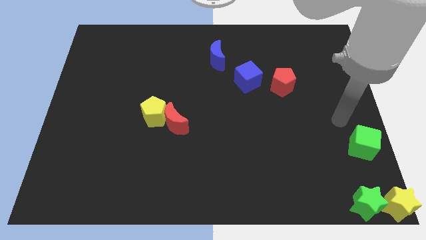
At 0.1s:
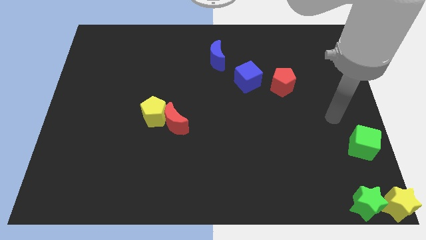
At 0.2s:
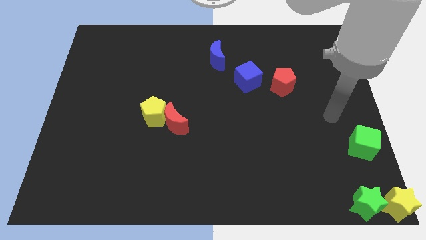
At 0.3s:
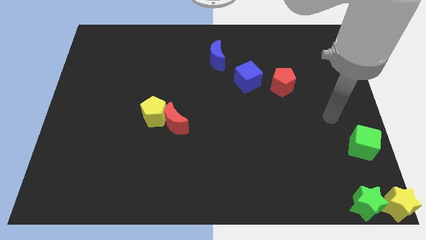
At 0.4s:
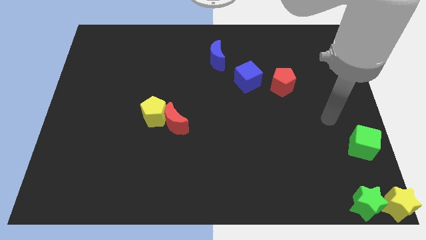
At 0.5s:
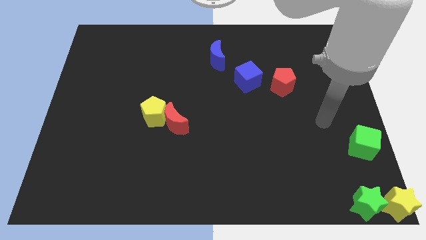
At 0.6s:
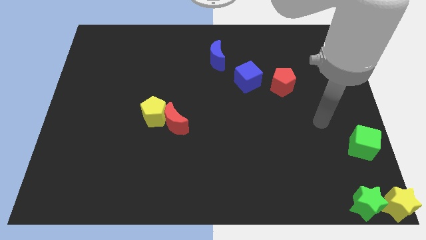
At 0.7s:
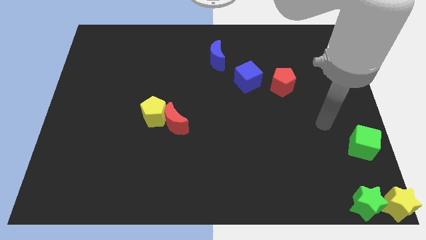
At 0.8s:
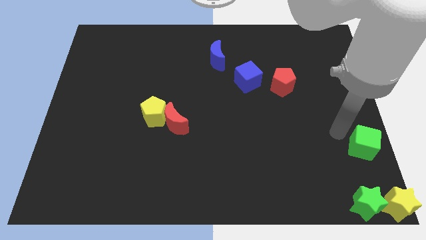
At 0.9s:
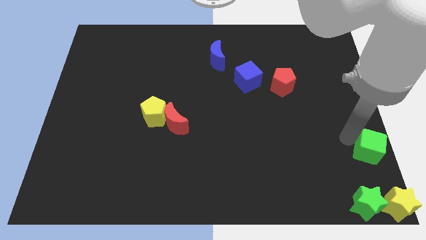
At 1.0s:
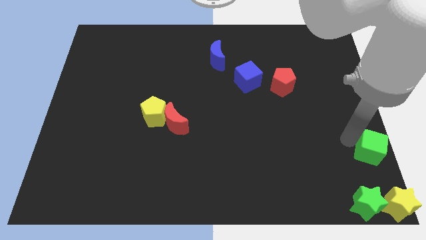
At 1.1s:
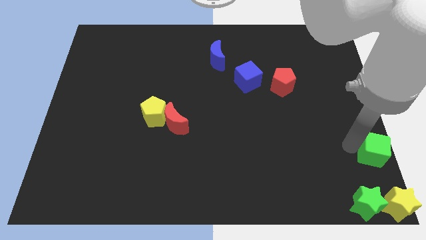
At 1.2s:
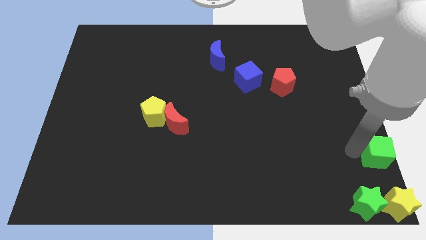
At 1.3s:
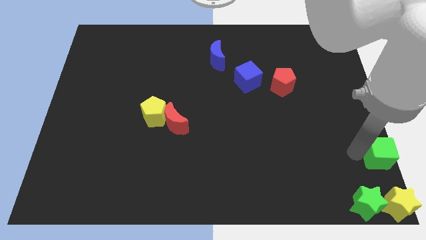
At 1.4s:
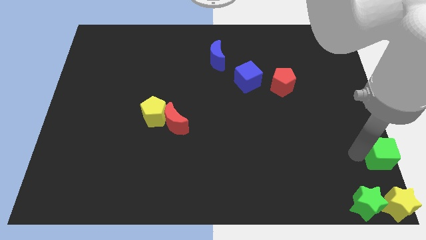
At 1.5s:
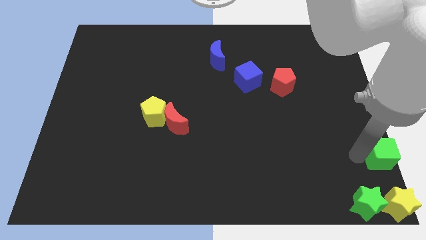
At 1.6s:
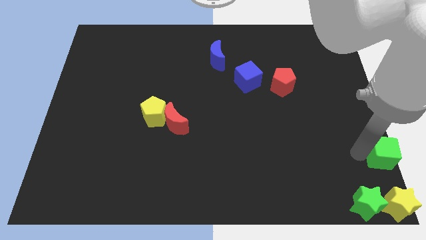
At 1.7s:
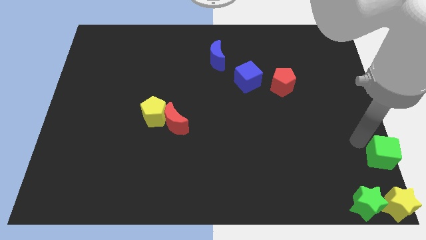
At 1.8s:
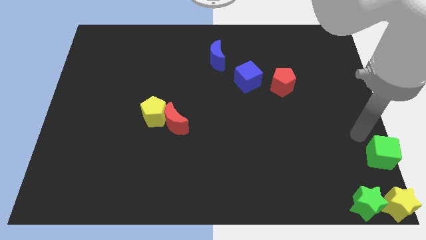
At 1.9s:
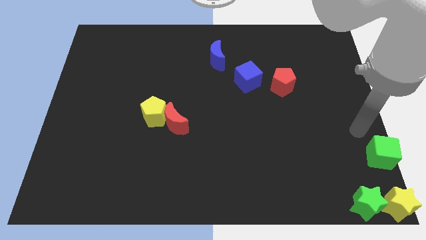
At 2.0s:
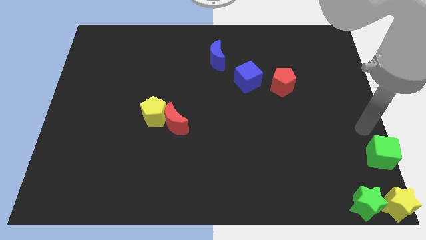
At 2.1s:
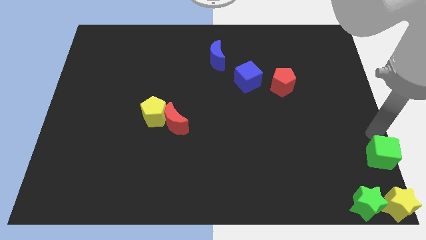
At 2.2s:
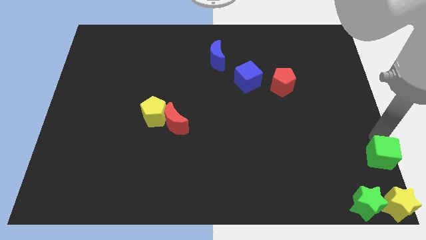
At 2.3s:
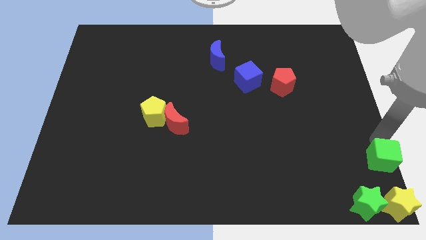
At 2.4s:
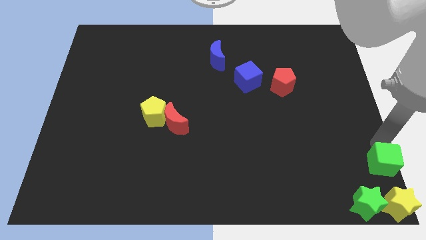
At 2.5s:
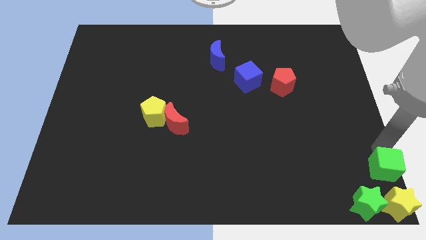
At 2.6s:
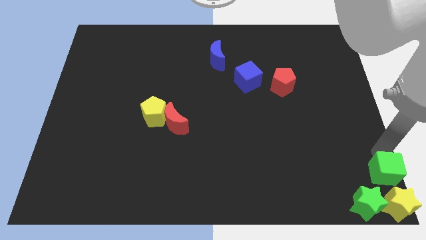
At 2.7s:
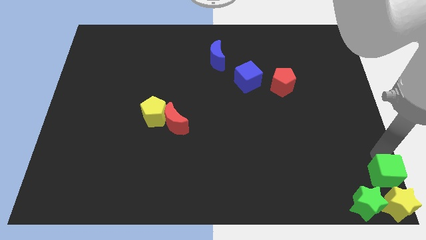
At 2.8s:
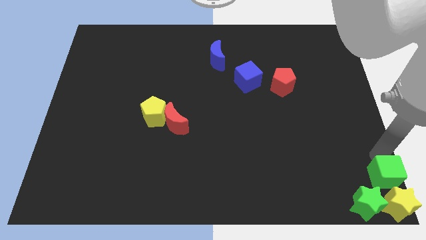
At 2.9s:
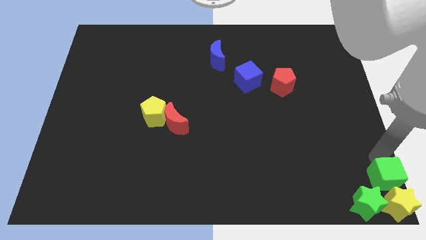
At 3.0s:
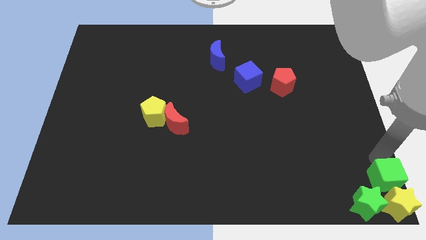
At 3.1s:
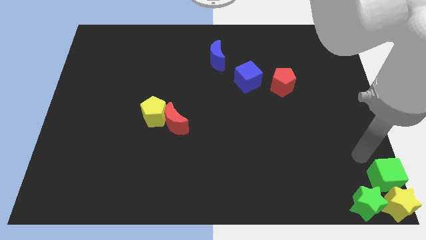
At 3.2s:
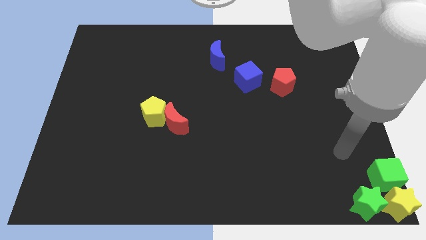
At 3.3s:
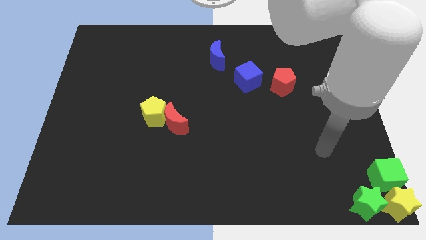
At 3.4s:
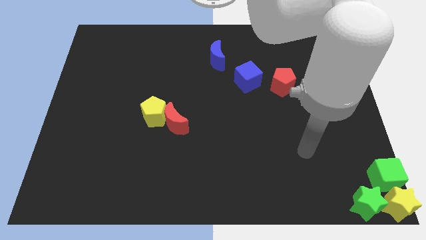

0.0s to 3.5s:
push the green cube towards the yellow star

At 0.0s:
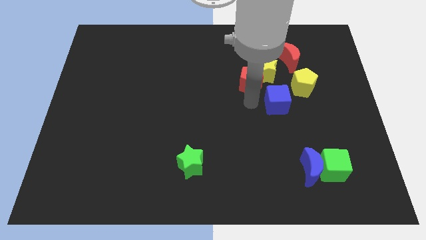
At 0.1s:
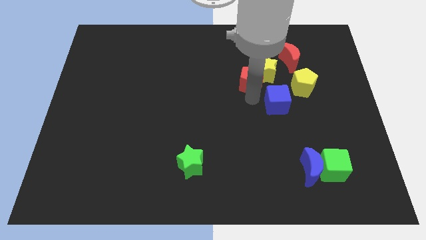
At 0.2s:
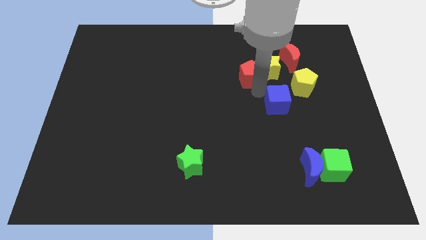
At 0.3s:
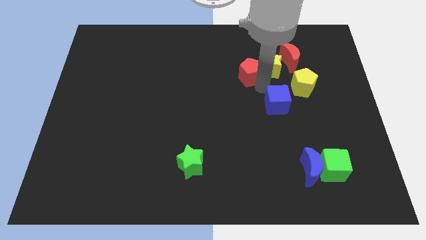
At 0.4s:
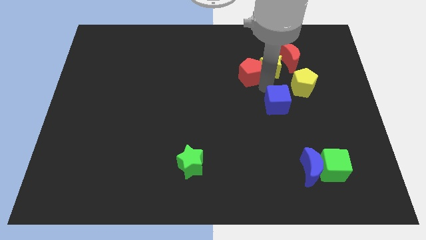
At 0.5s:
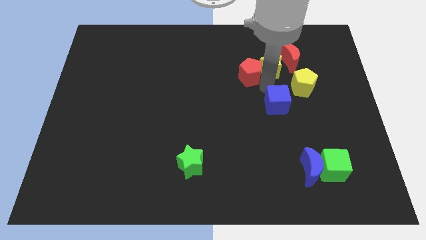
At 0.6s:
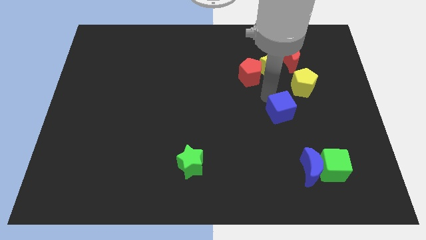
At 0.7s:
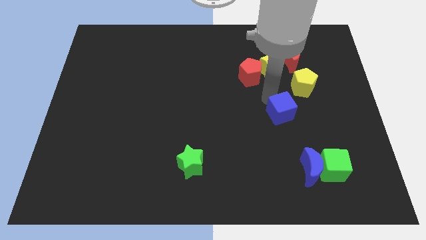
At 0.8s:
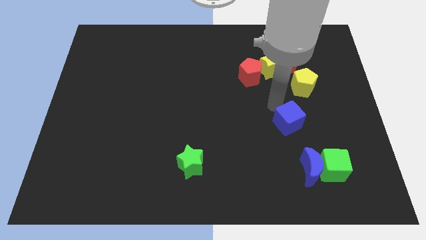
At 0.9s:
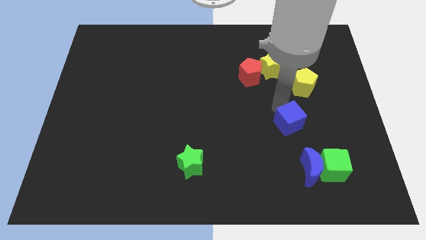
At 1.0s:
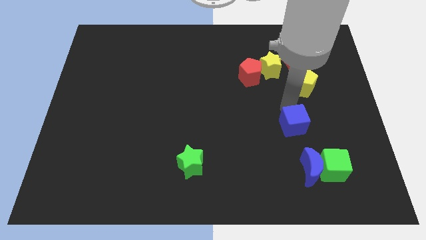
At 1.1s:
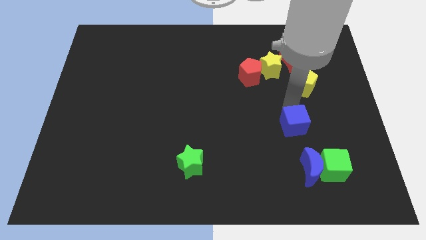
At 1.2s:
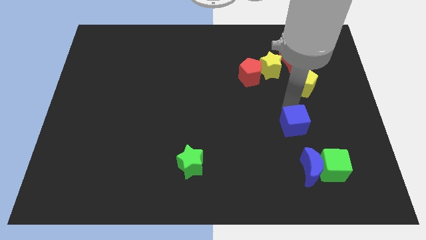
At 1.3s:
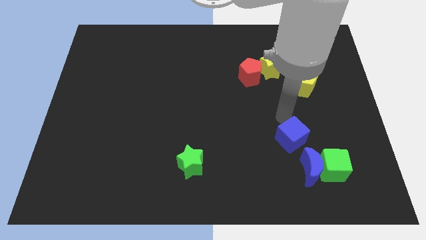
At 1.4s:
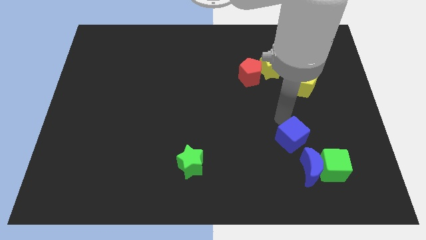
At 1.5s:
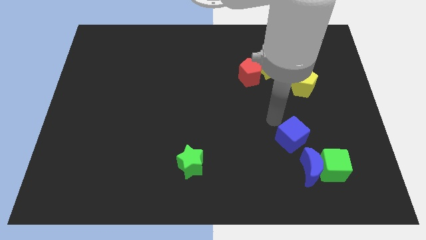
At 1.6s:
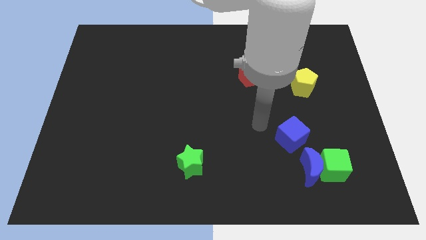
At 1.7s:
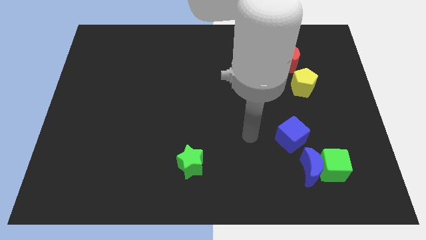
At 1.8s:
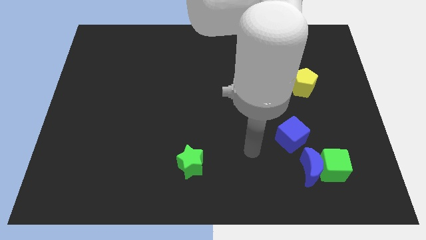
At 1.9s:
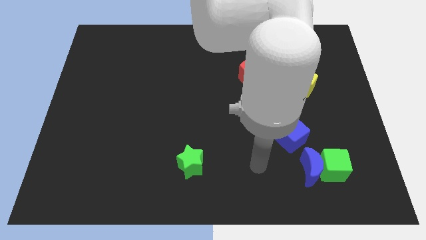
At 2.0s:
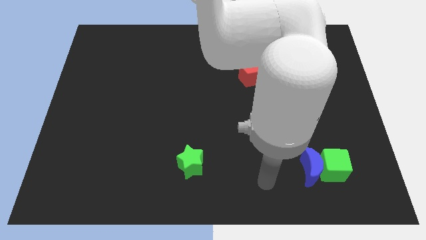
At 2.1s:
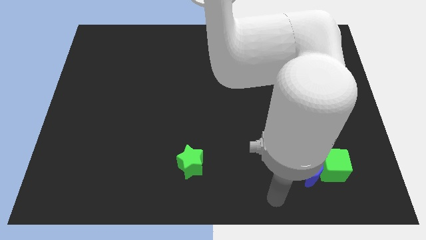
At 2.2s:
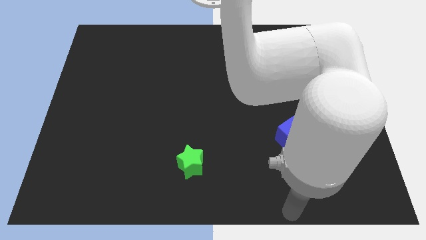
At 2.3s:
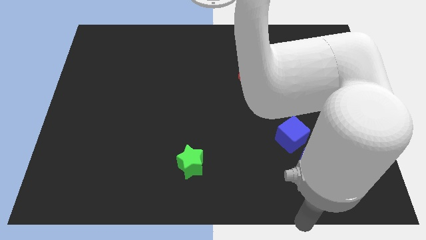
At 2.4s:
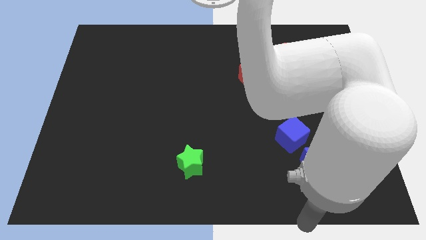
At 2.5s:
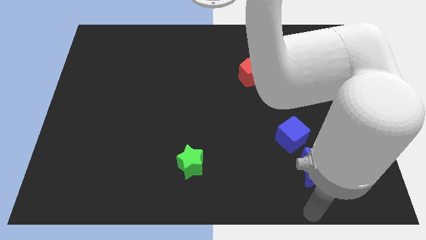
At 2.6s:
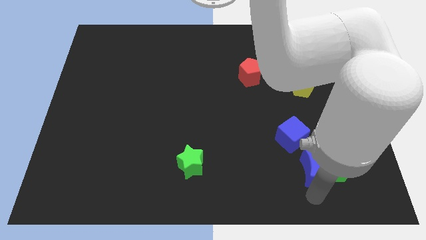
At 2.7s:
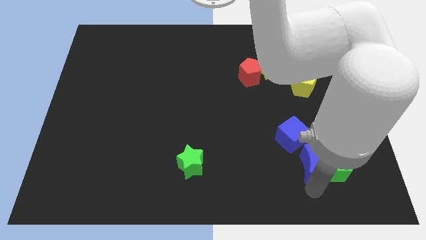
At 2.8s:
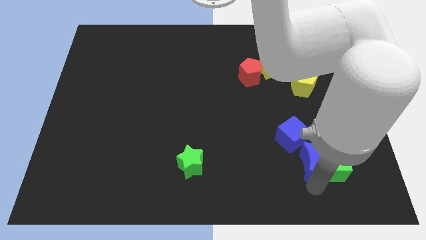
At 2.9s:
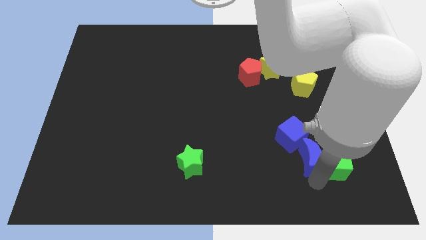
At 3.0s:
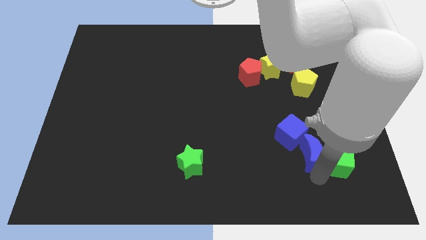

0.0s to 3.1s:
group up the blue blocks at the left side of the green cube

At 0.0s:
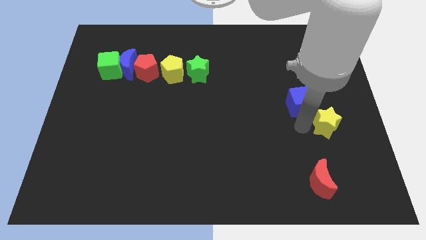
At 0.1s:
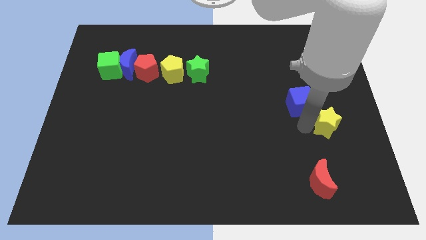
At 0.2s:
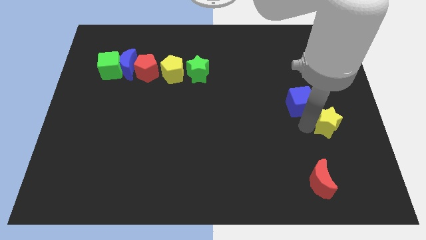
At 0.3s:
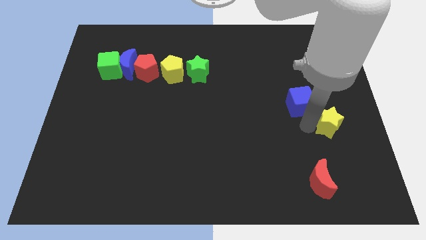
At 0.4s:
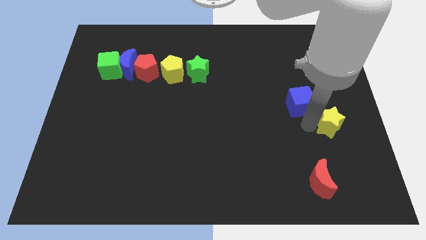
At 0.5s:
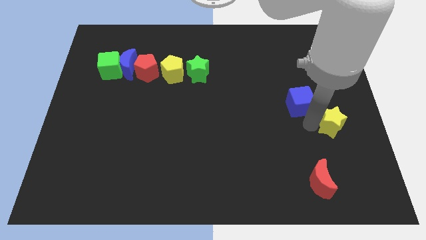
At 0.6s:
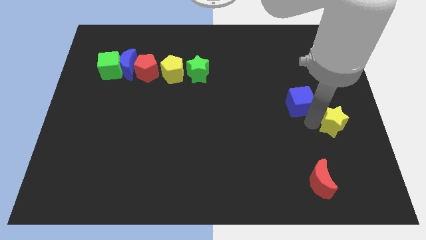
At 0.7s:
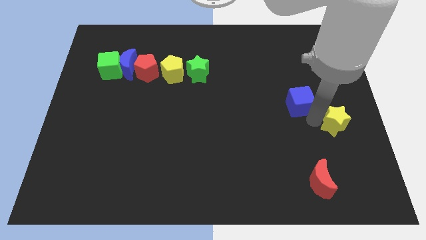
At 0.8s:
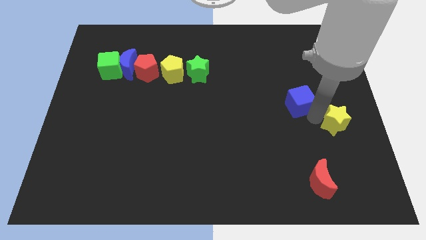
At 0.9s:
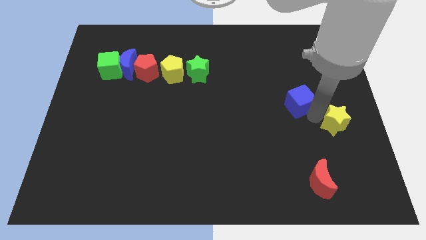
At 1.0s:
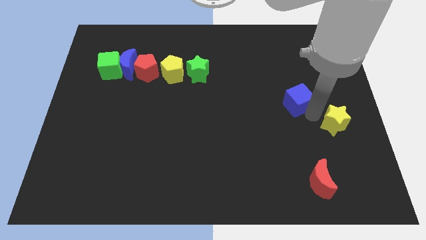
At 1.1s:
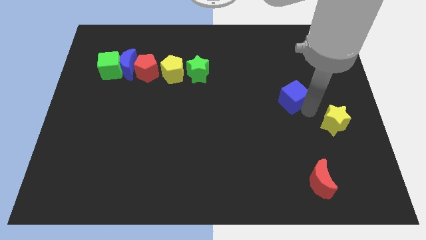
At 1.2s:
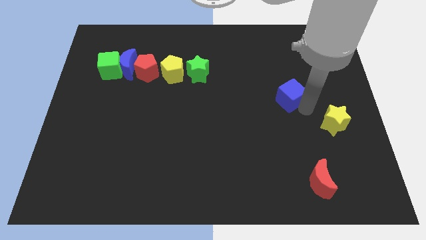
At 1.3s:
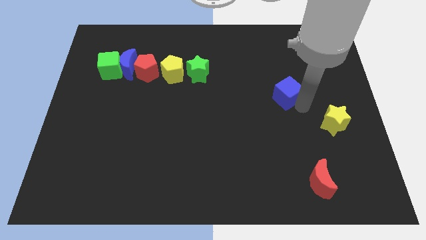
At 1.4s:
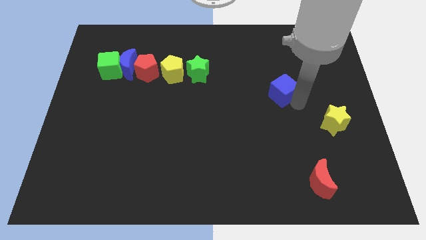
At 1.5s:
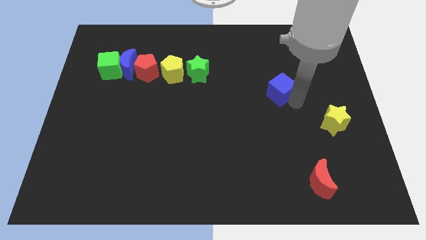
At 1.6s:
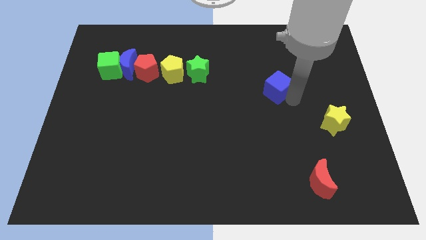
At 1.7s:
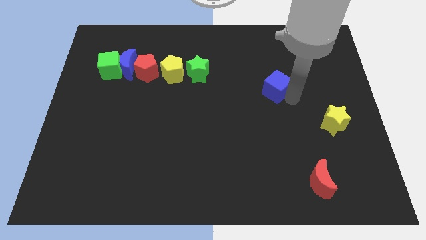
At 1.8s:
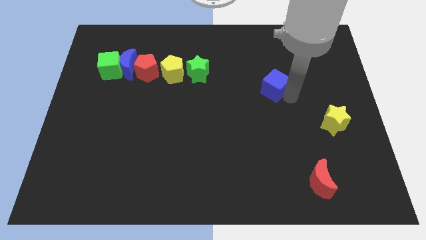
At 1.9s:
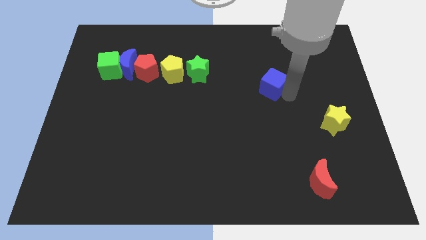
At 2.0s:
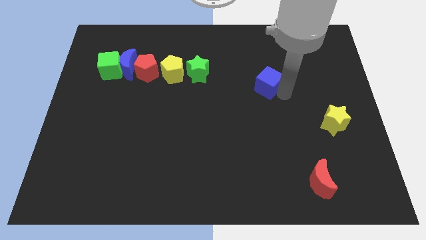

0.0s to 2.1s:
separate the blue cube and yellow star

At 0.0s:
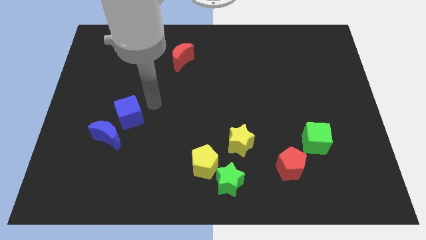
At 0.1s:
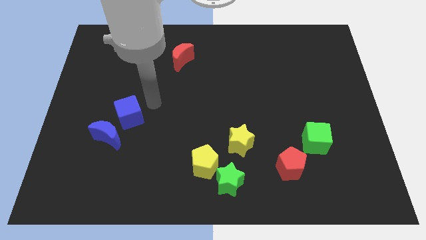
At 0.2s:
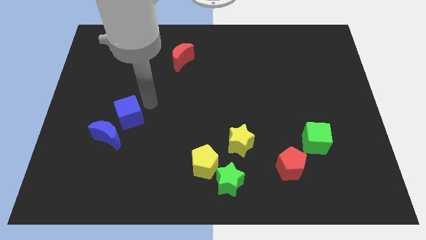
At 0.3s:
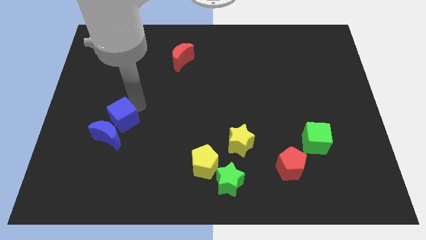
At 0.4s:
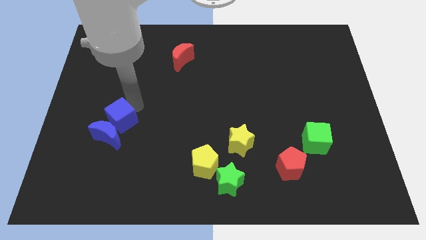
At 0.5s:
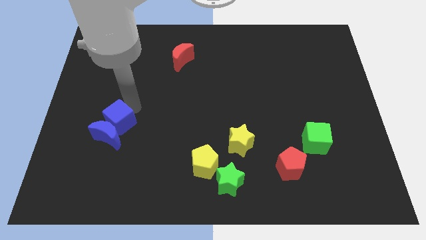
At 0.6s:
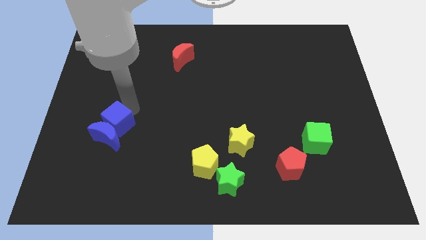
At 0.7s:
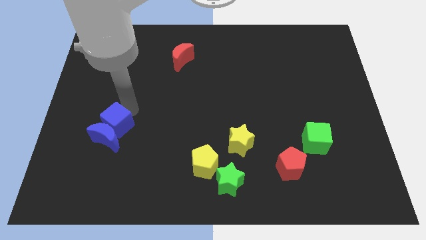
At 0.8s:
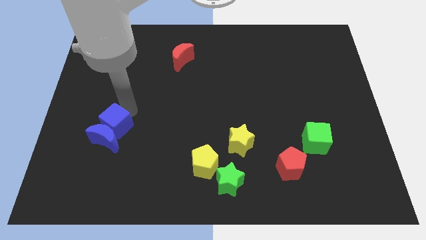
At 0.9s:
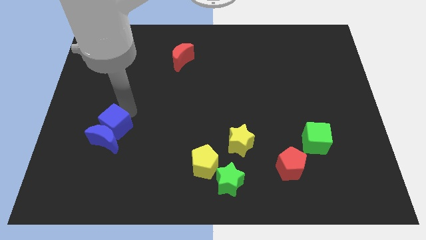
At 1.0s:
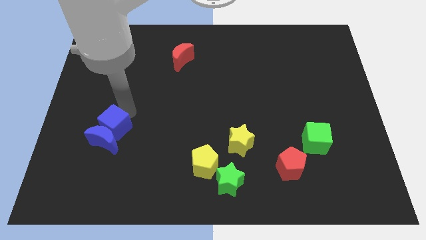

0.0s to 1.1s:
move the blue cube into the blue moon
